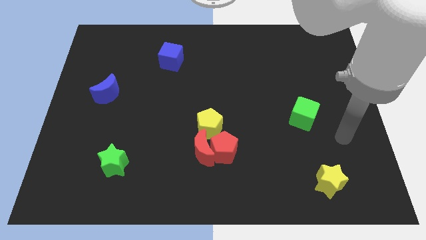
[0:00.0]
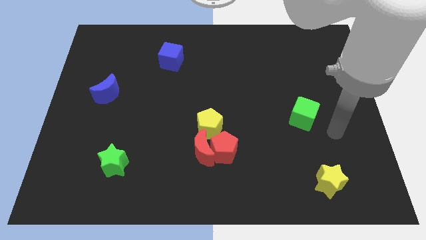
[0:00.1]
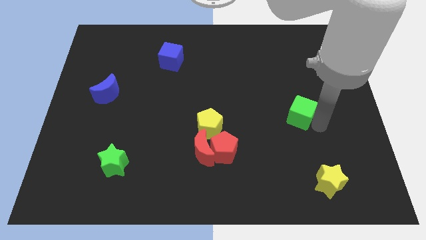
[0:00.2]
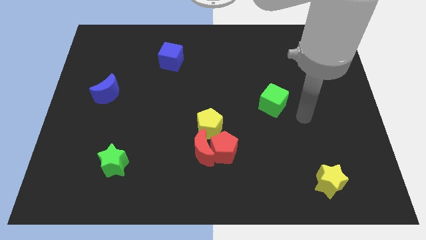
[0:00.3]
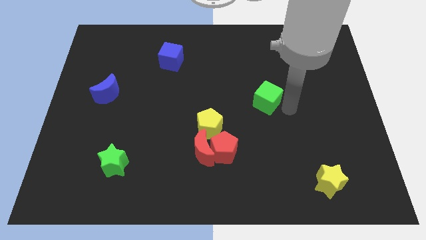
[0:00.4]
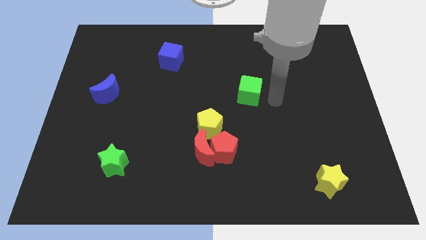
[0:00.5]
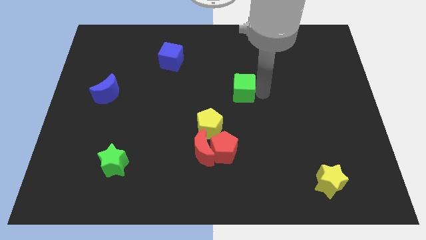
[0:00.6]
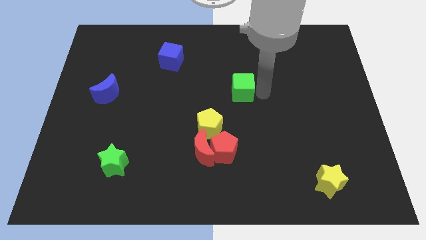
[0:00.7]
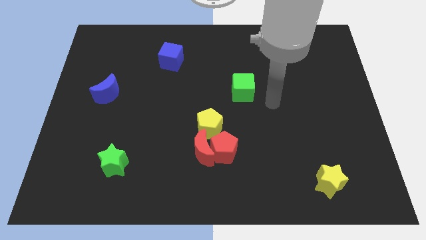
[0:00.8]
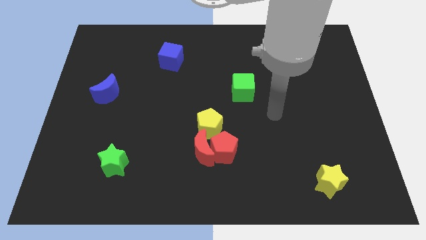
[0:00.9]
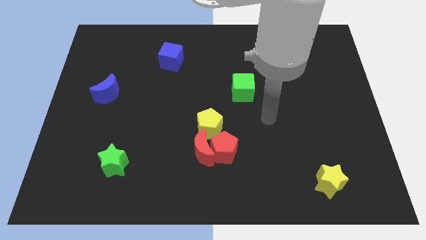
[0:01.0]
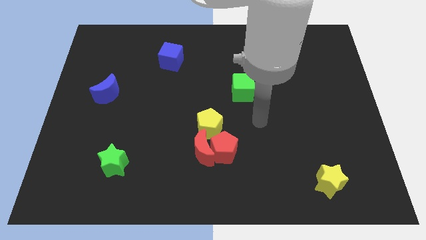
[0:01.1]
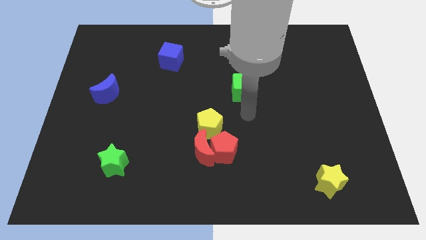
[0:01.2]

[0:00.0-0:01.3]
place the green cube diagonally on the top right side of the yellow pentagon

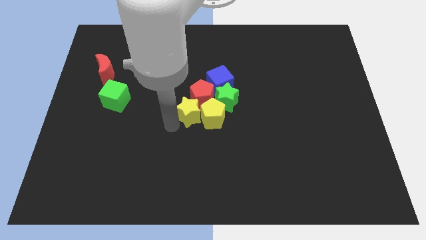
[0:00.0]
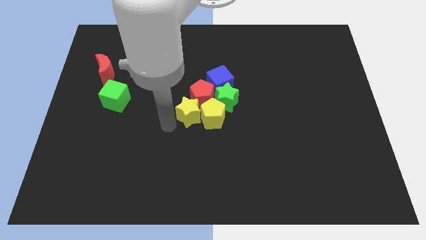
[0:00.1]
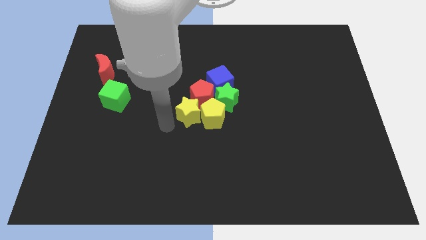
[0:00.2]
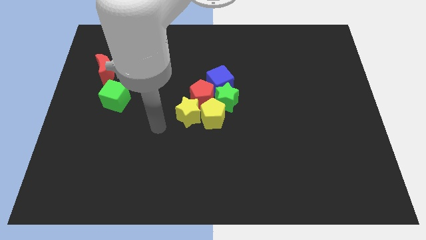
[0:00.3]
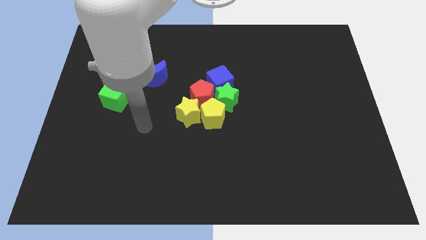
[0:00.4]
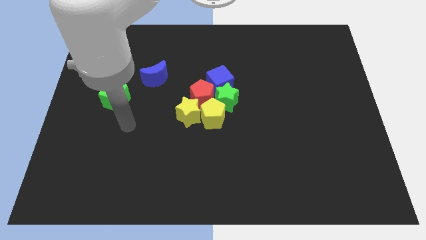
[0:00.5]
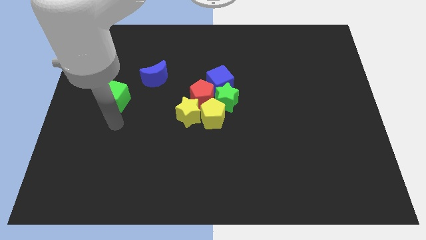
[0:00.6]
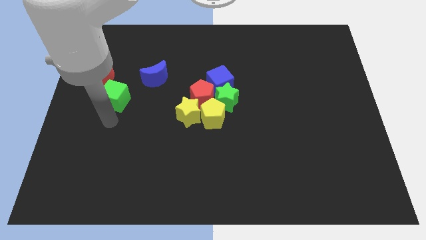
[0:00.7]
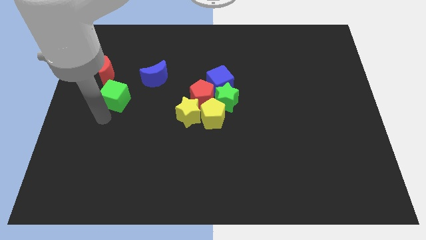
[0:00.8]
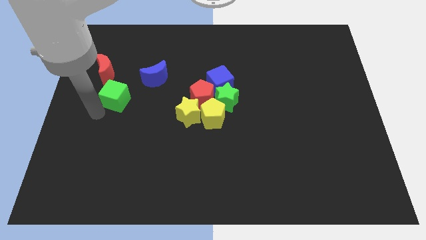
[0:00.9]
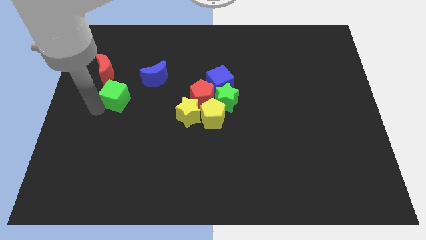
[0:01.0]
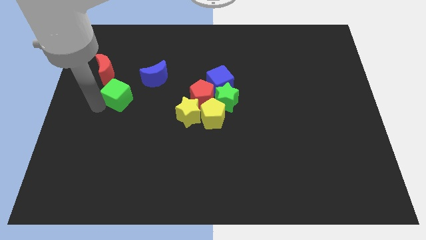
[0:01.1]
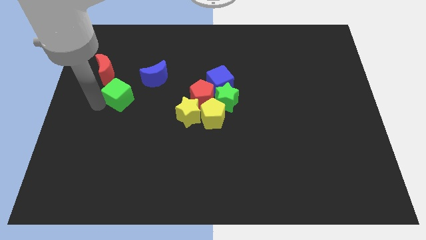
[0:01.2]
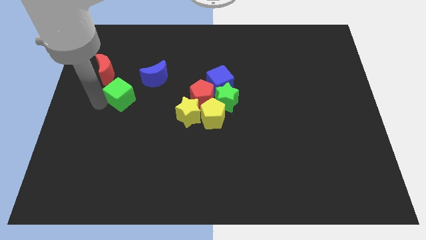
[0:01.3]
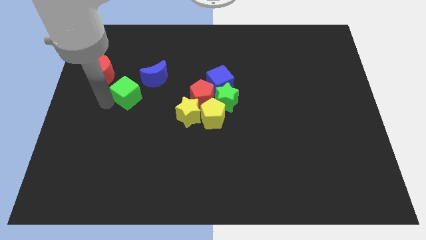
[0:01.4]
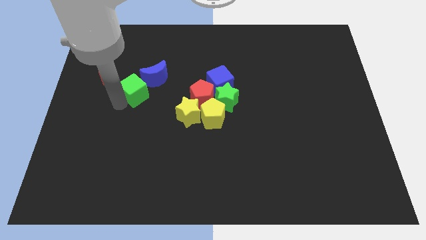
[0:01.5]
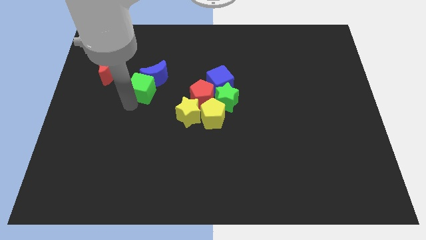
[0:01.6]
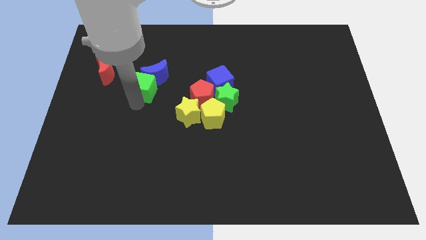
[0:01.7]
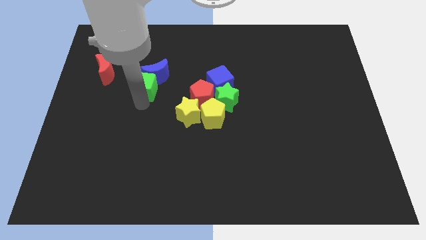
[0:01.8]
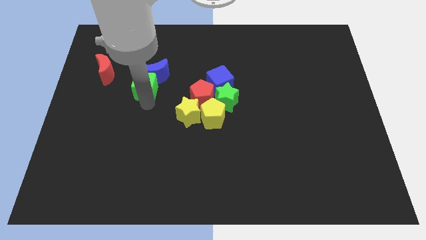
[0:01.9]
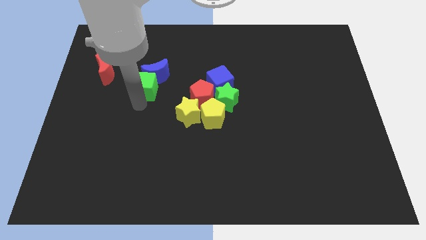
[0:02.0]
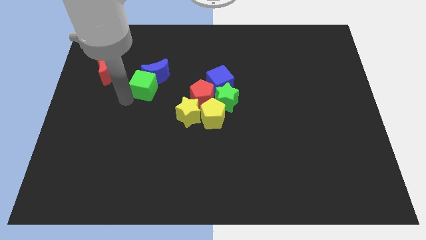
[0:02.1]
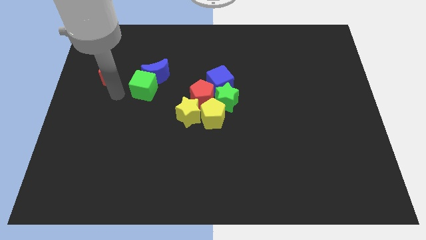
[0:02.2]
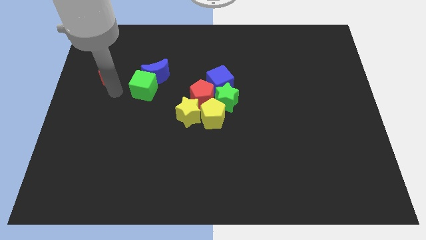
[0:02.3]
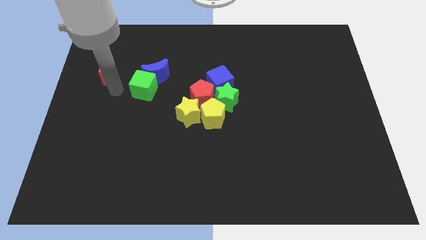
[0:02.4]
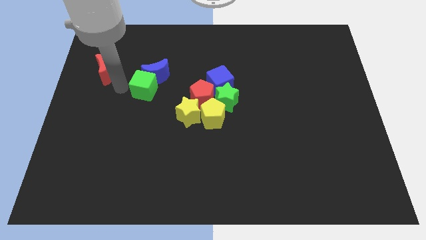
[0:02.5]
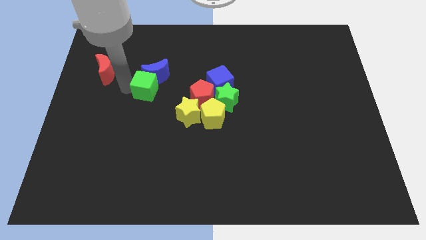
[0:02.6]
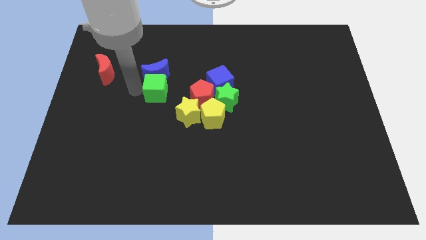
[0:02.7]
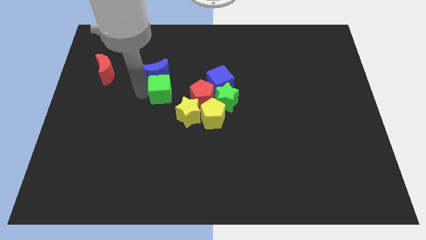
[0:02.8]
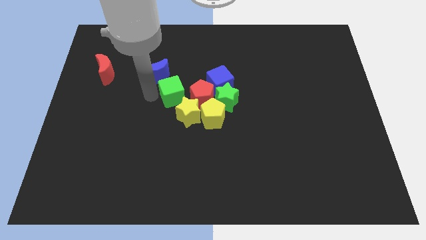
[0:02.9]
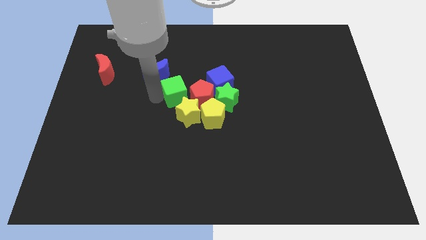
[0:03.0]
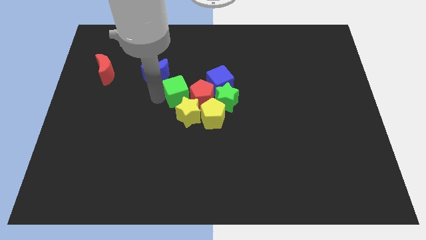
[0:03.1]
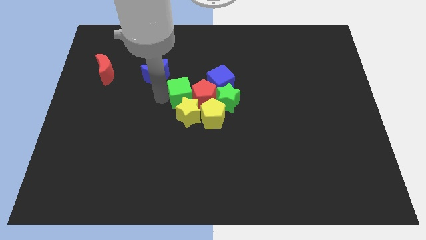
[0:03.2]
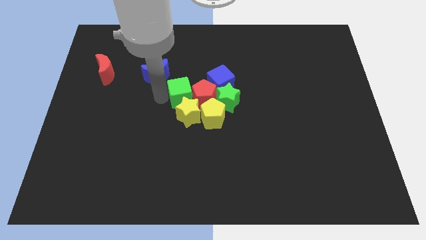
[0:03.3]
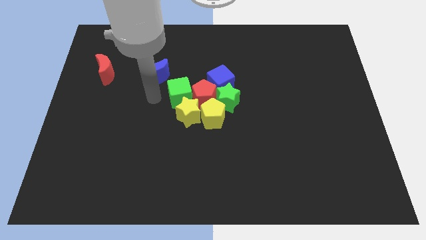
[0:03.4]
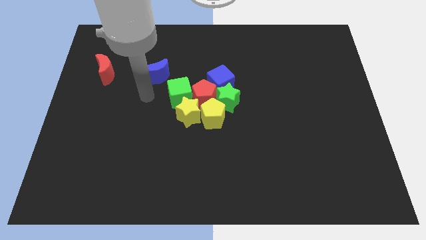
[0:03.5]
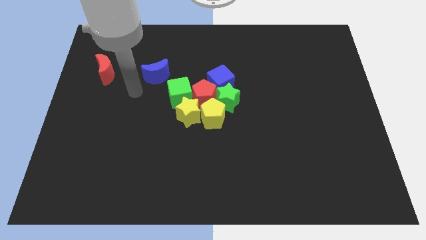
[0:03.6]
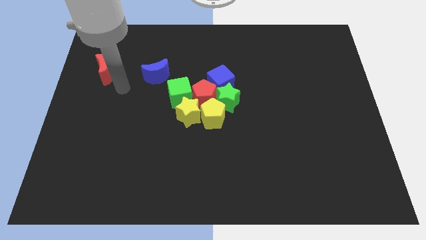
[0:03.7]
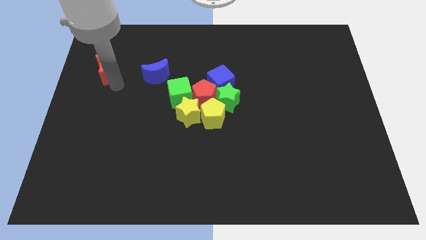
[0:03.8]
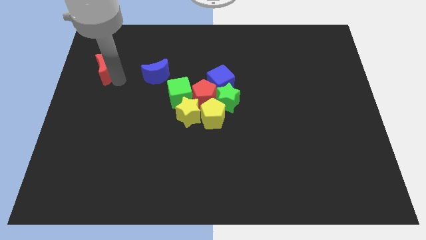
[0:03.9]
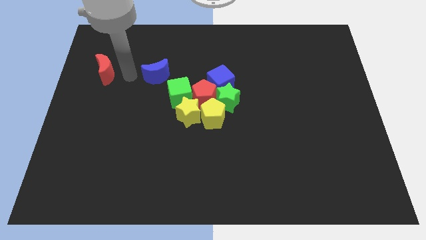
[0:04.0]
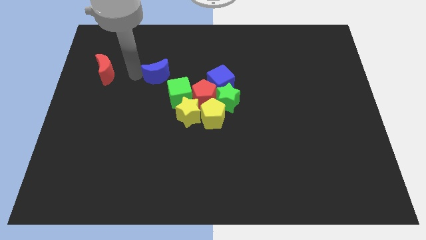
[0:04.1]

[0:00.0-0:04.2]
move the green cube into the group of blocks

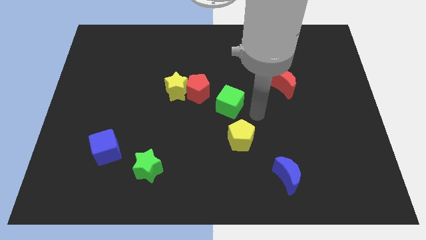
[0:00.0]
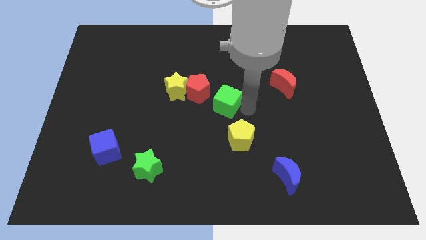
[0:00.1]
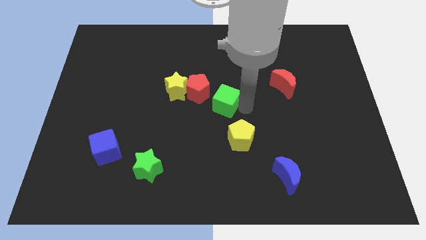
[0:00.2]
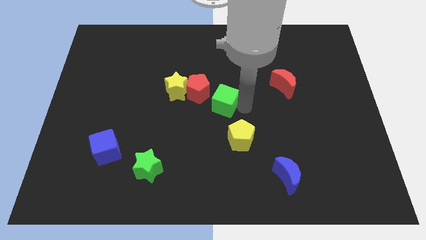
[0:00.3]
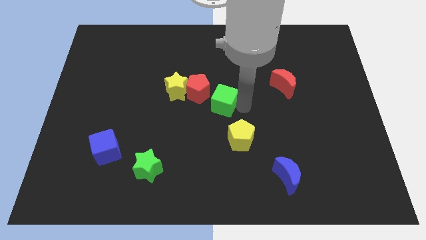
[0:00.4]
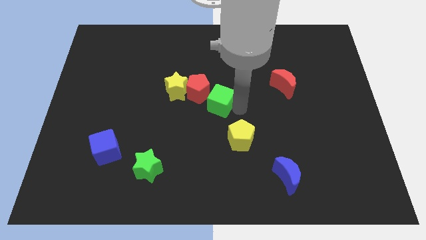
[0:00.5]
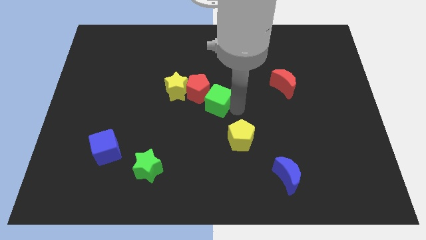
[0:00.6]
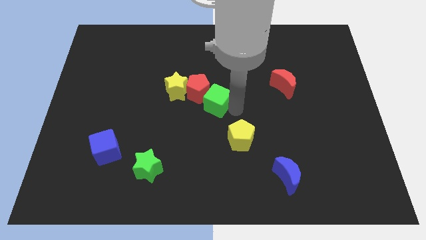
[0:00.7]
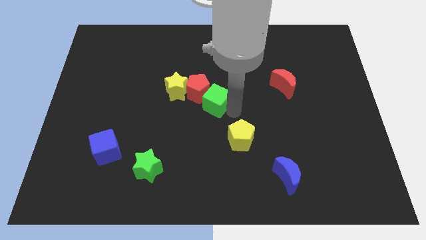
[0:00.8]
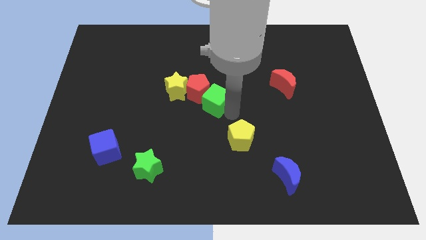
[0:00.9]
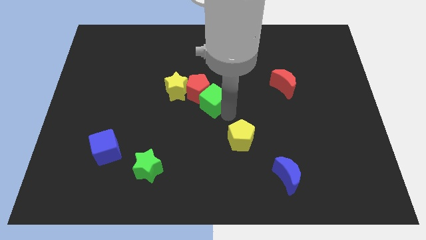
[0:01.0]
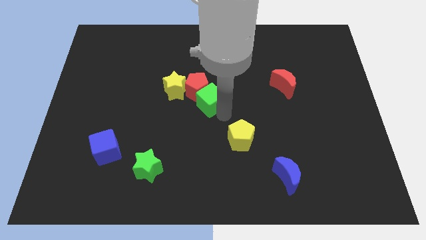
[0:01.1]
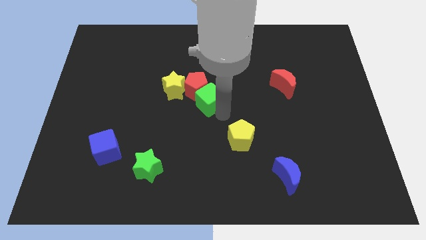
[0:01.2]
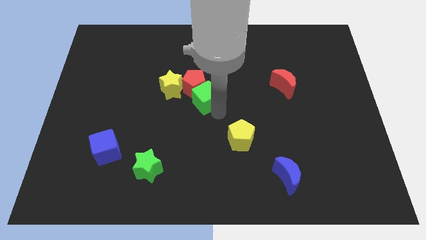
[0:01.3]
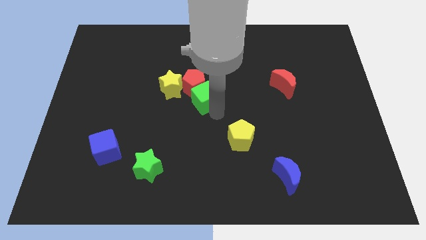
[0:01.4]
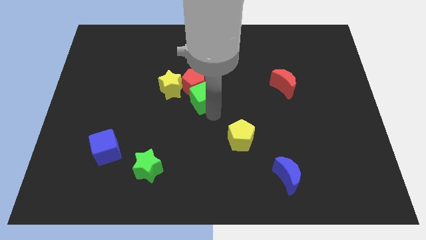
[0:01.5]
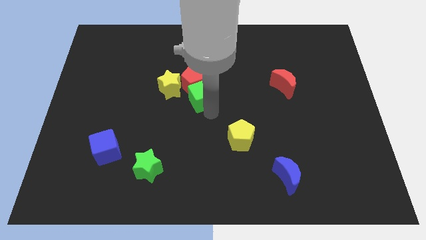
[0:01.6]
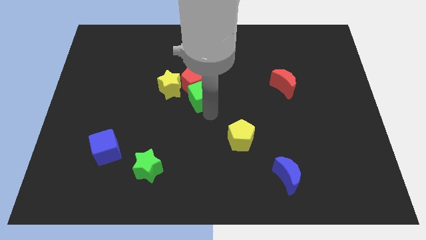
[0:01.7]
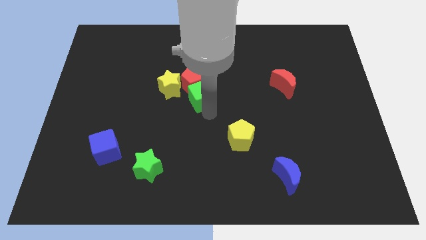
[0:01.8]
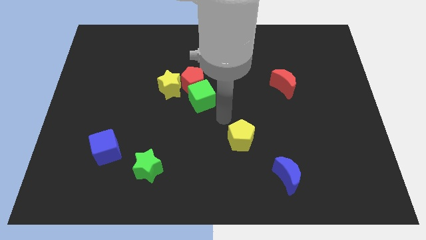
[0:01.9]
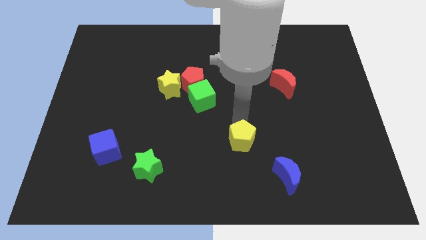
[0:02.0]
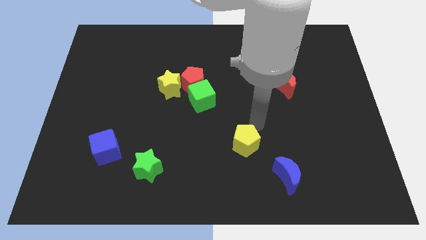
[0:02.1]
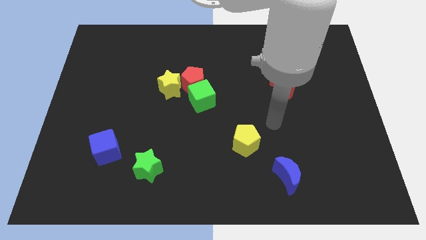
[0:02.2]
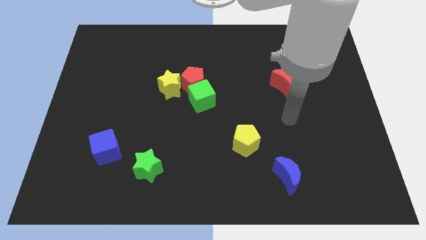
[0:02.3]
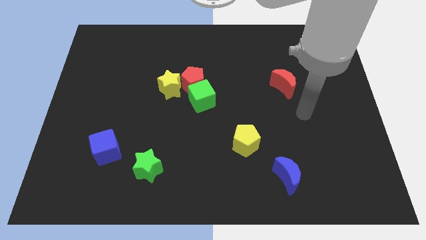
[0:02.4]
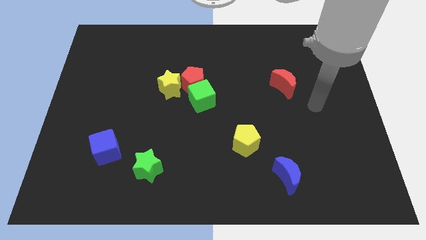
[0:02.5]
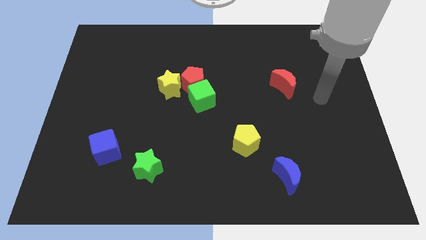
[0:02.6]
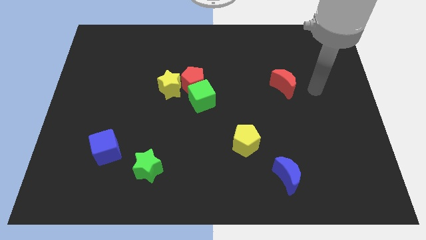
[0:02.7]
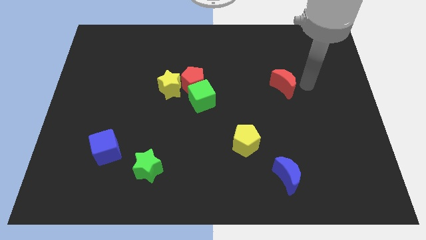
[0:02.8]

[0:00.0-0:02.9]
push the green cube down to the red pentagon

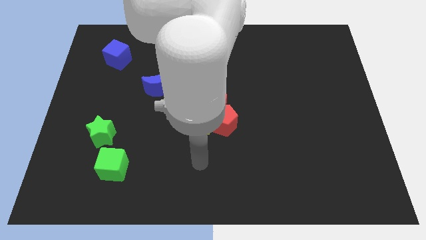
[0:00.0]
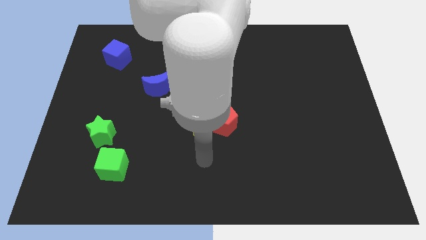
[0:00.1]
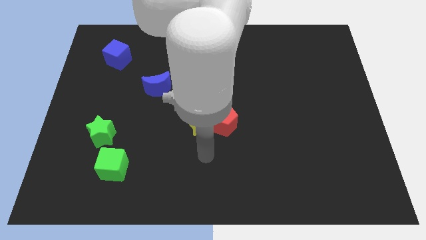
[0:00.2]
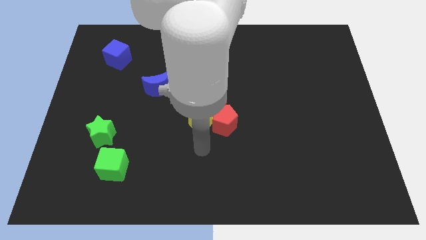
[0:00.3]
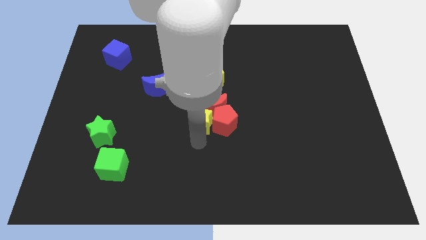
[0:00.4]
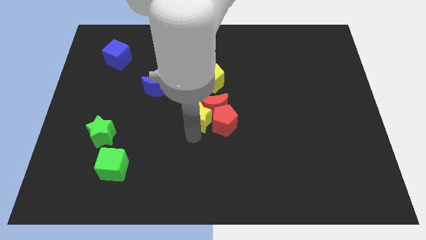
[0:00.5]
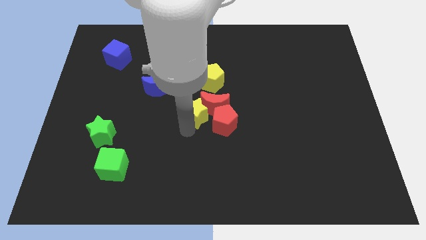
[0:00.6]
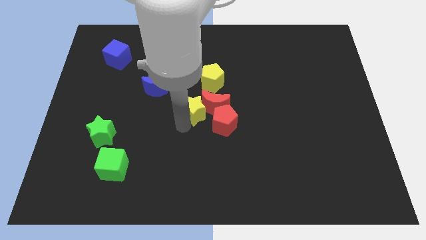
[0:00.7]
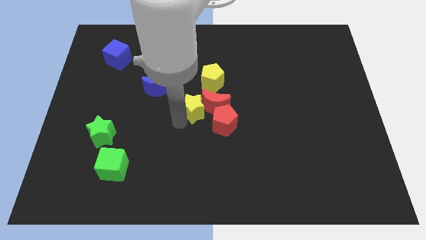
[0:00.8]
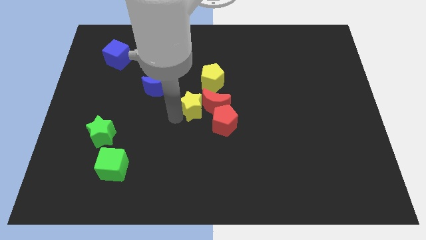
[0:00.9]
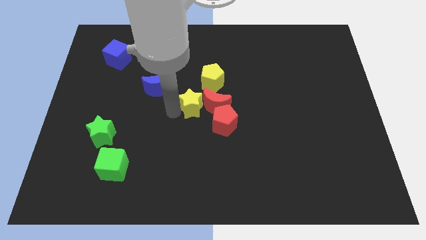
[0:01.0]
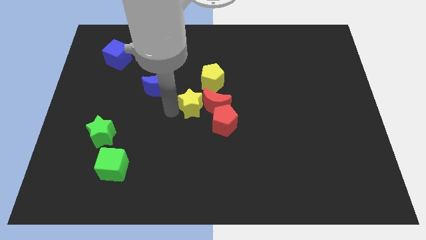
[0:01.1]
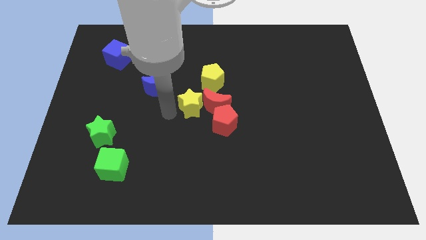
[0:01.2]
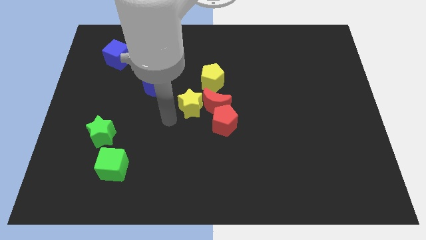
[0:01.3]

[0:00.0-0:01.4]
move the yellow star to the left of the red crescent
